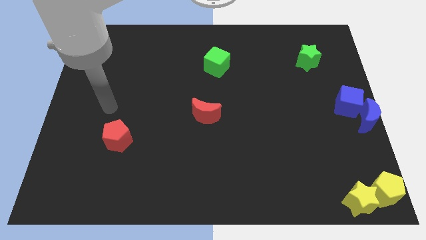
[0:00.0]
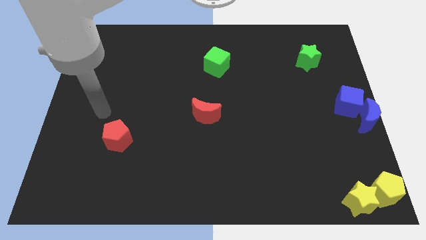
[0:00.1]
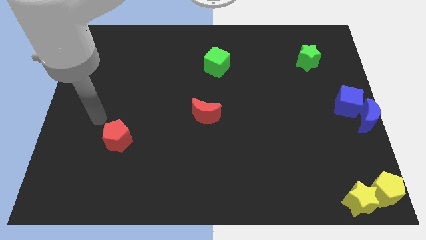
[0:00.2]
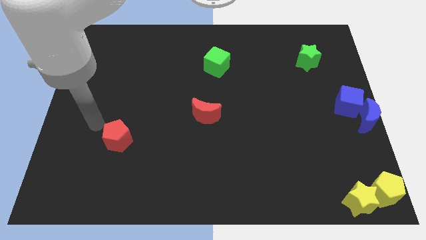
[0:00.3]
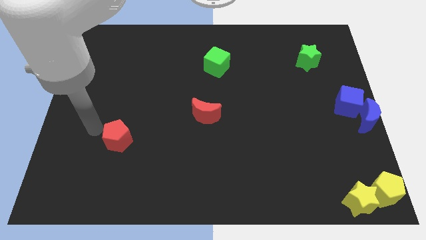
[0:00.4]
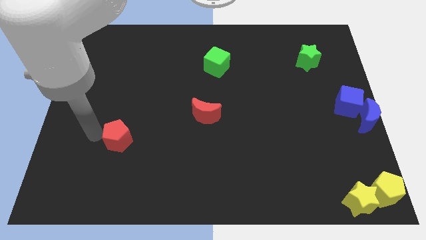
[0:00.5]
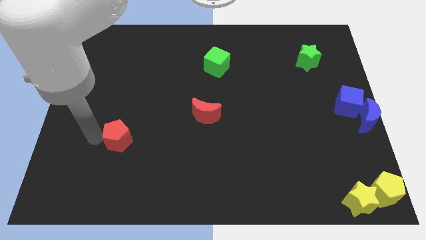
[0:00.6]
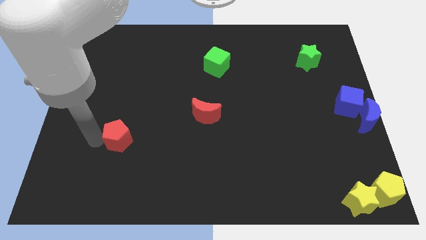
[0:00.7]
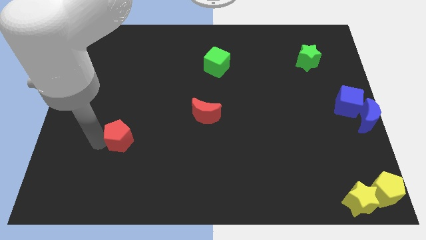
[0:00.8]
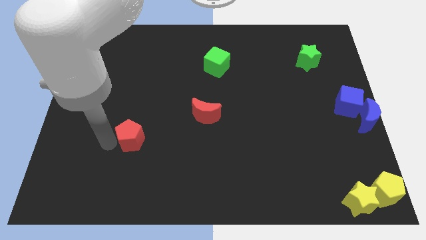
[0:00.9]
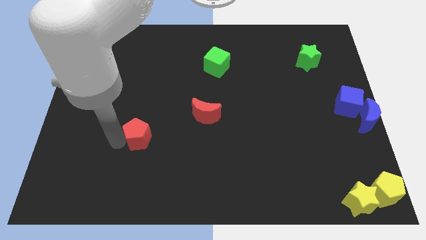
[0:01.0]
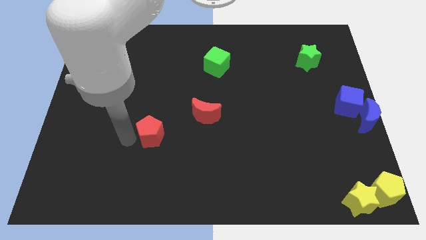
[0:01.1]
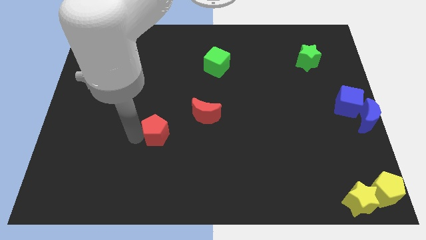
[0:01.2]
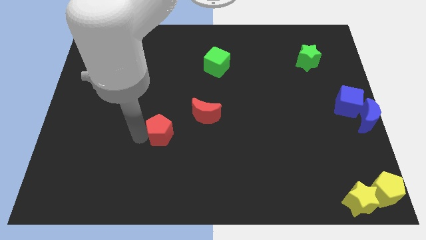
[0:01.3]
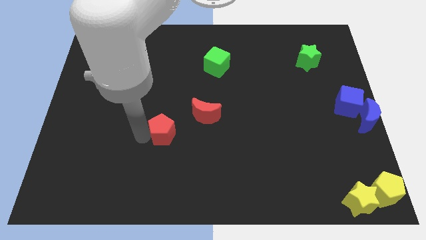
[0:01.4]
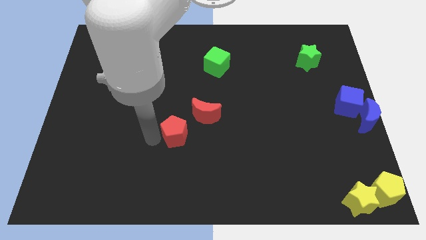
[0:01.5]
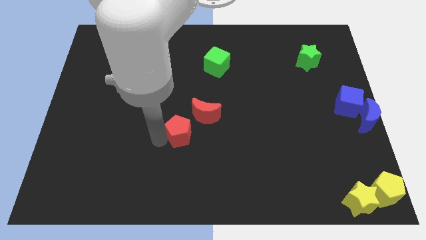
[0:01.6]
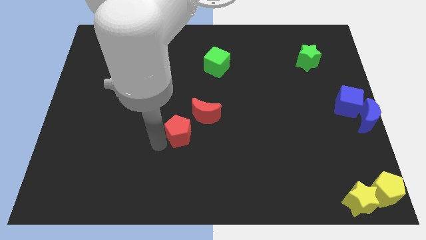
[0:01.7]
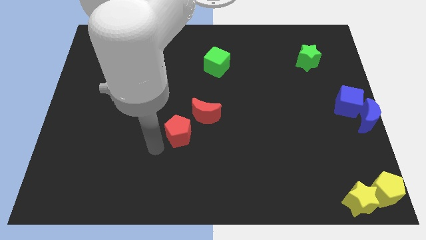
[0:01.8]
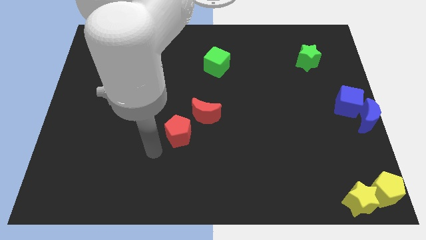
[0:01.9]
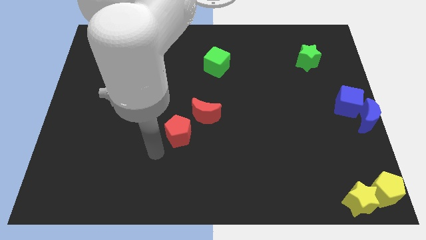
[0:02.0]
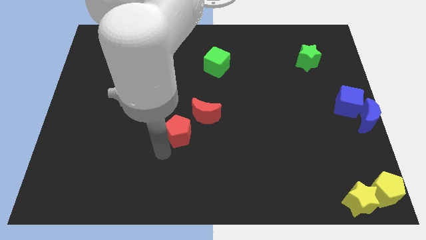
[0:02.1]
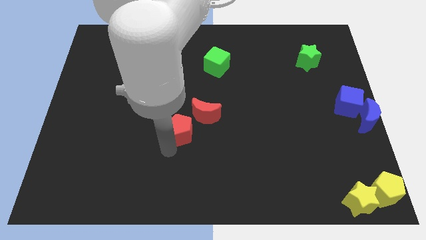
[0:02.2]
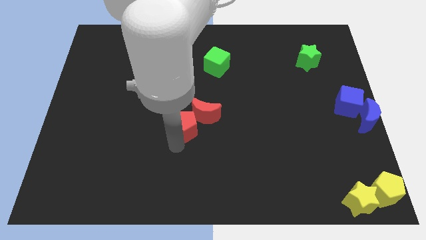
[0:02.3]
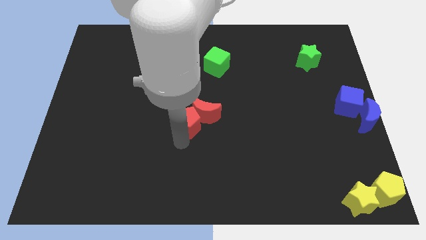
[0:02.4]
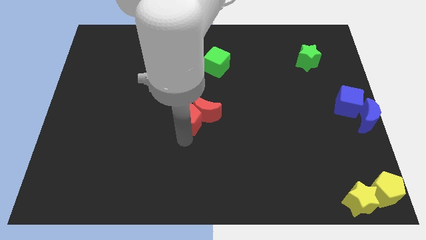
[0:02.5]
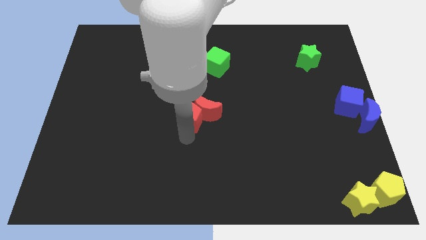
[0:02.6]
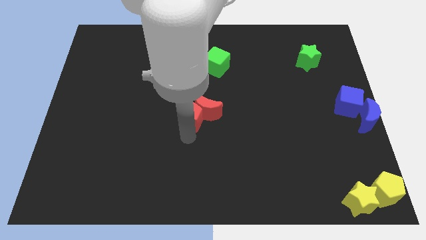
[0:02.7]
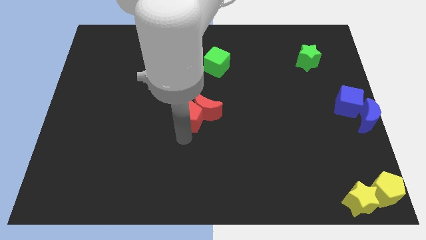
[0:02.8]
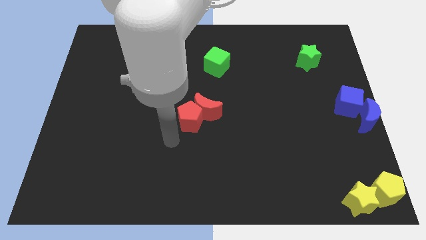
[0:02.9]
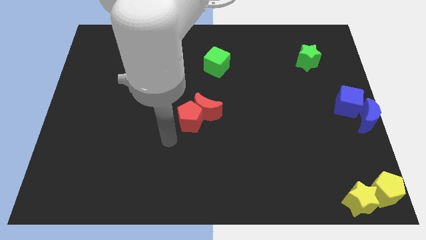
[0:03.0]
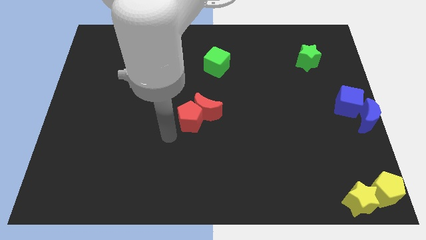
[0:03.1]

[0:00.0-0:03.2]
move the red pentagon into the red crescent

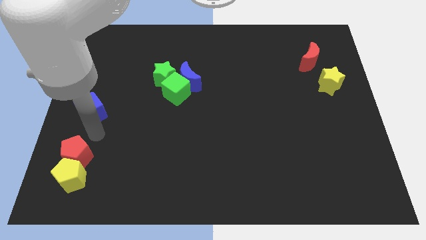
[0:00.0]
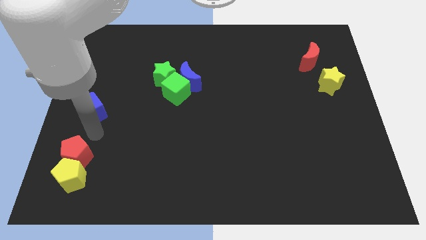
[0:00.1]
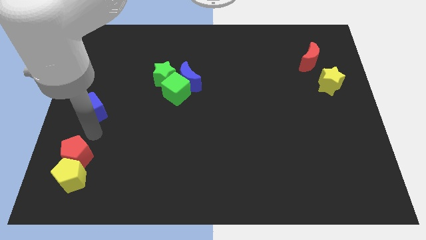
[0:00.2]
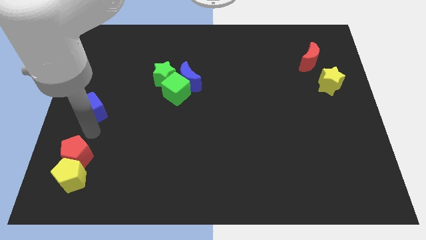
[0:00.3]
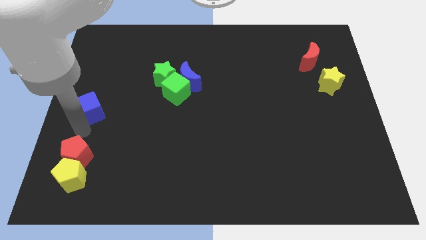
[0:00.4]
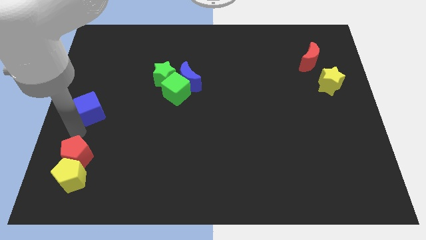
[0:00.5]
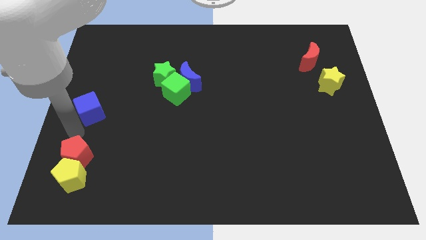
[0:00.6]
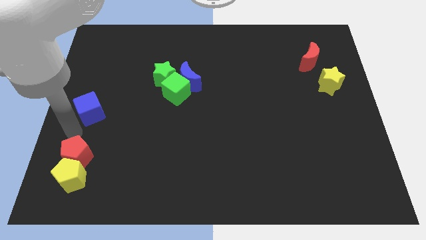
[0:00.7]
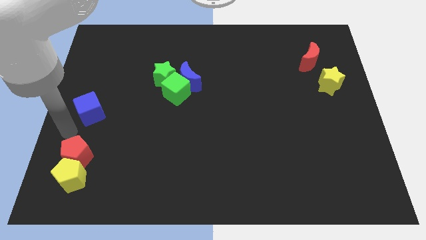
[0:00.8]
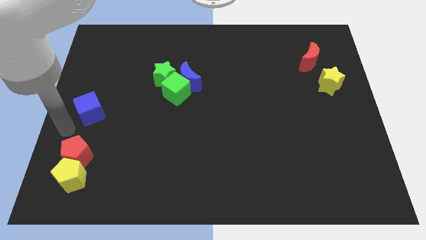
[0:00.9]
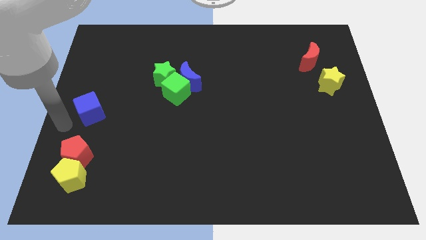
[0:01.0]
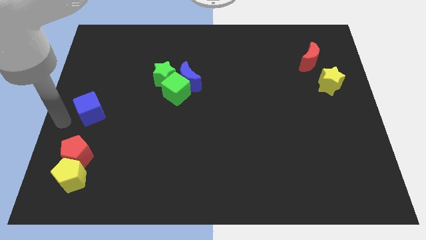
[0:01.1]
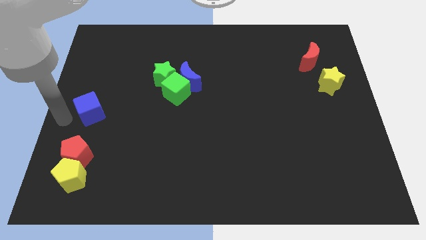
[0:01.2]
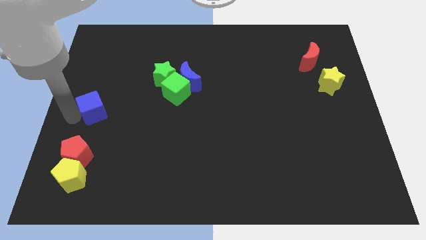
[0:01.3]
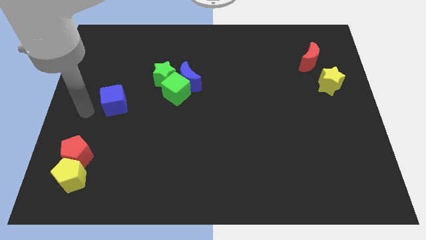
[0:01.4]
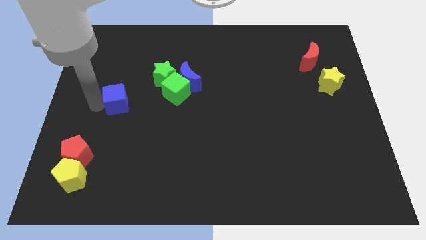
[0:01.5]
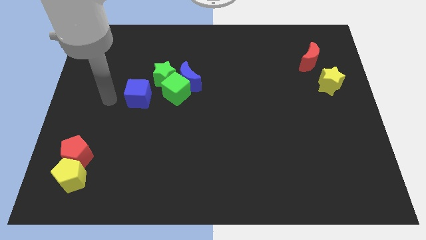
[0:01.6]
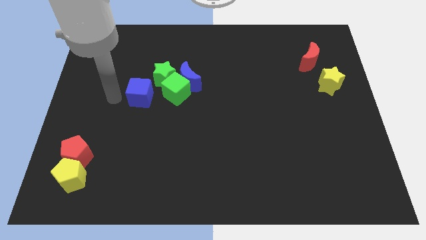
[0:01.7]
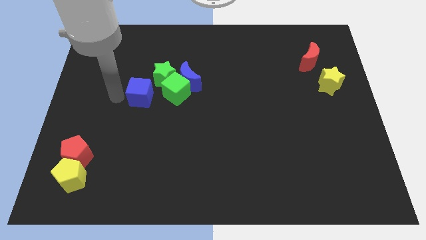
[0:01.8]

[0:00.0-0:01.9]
move the blue cube towards the green blocks

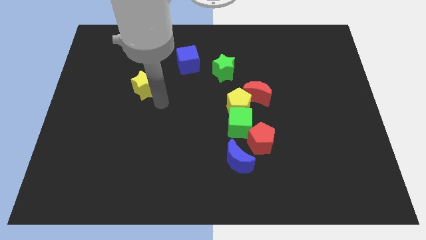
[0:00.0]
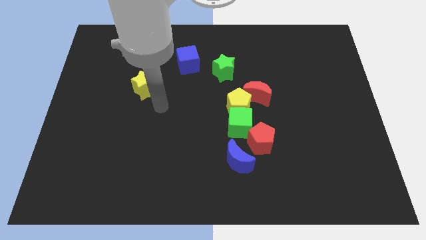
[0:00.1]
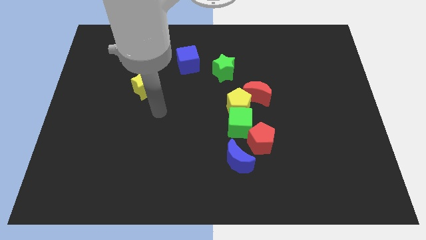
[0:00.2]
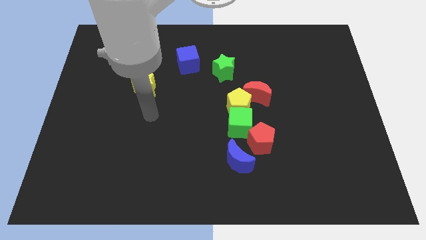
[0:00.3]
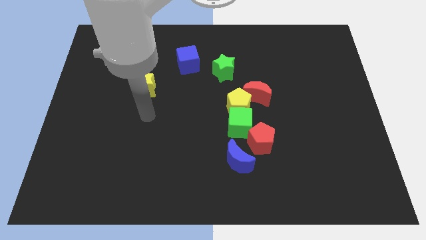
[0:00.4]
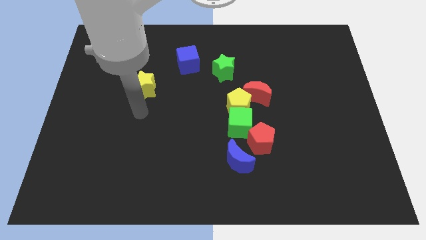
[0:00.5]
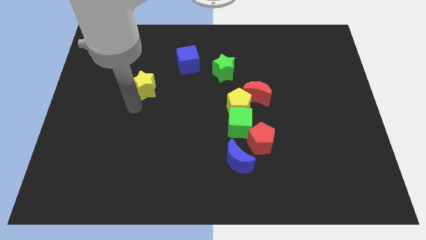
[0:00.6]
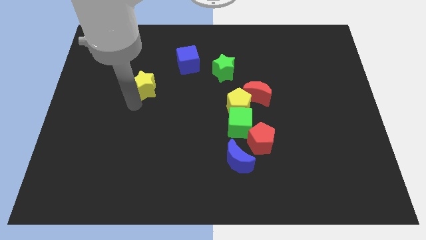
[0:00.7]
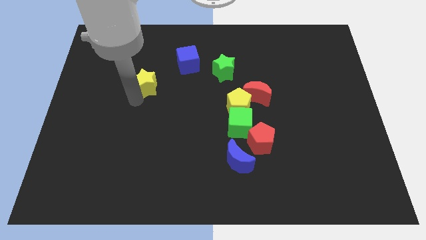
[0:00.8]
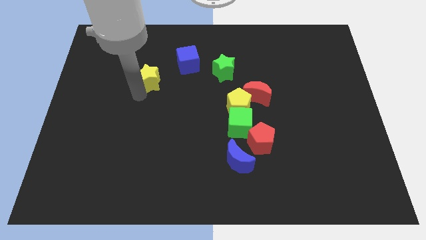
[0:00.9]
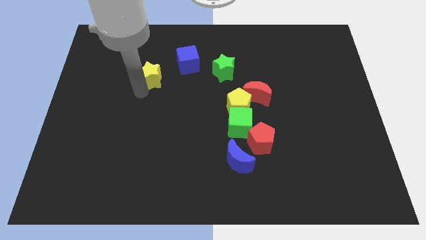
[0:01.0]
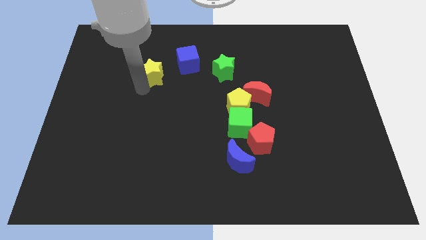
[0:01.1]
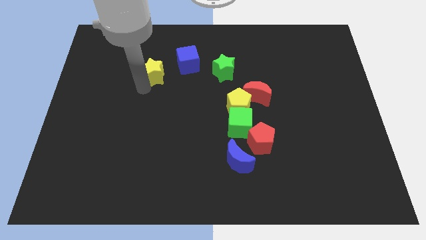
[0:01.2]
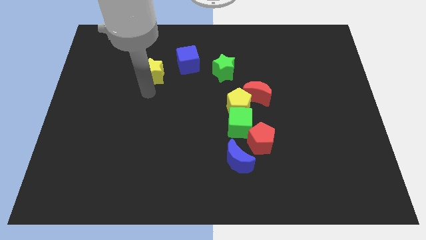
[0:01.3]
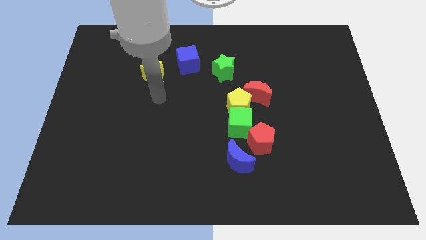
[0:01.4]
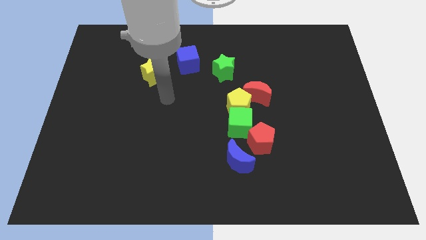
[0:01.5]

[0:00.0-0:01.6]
place the yellow star left to the blue cube

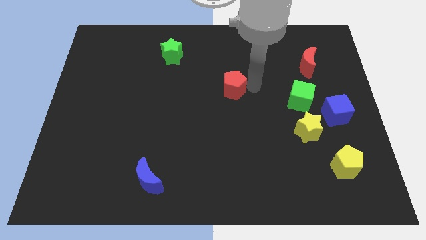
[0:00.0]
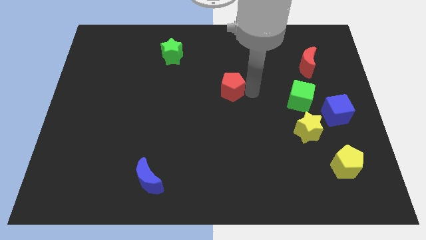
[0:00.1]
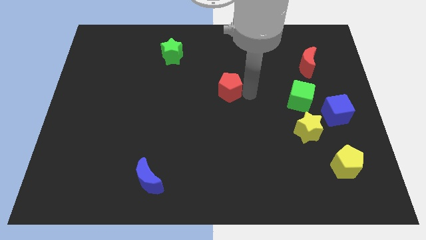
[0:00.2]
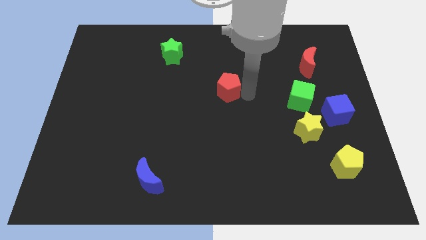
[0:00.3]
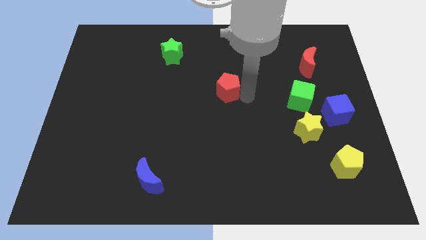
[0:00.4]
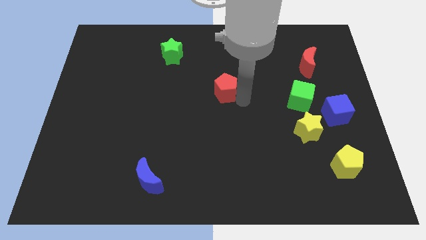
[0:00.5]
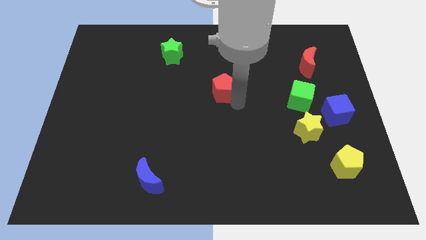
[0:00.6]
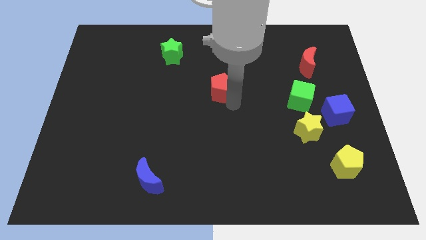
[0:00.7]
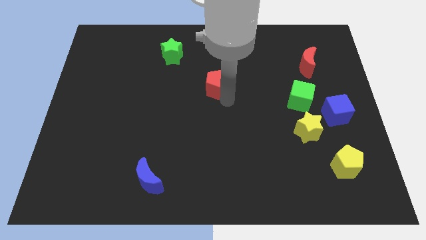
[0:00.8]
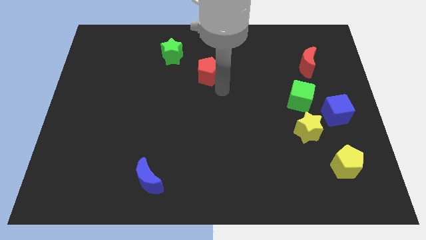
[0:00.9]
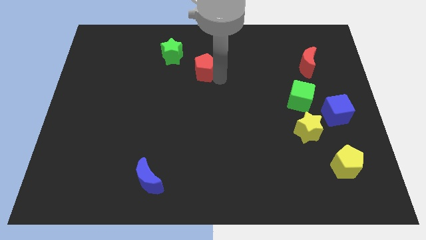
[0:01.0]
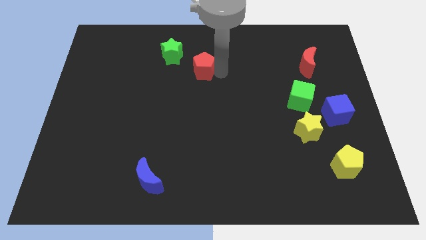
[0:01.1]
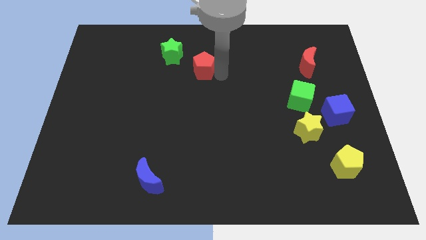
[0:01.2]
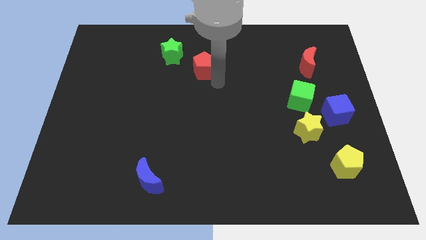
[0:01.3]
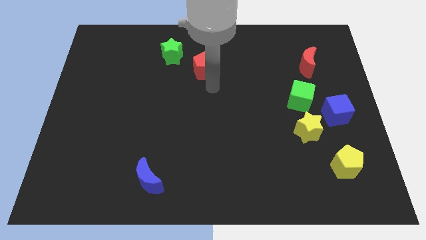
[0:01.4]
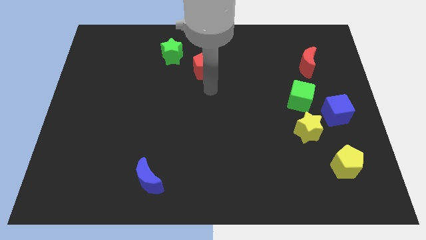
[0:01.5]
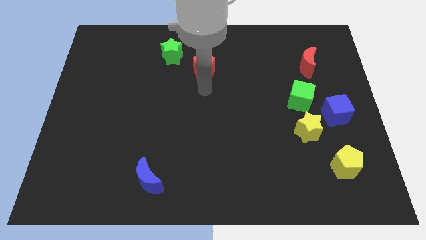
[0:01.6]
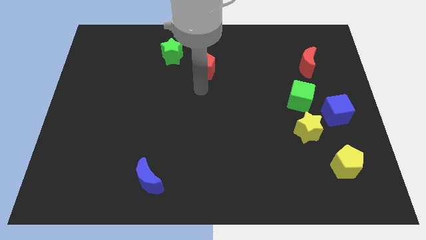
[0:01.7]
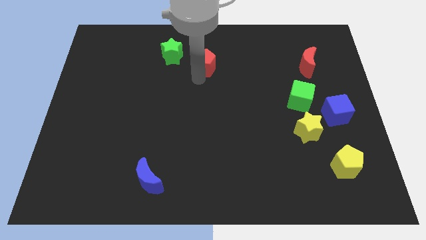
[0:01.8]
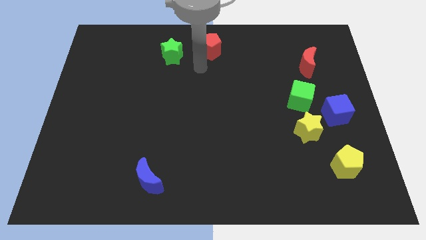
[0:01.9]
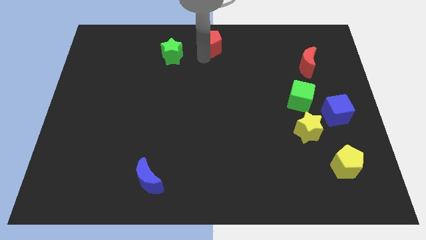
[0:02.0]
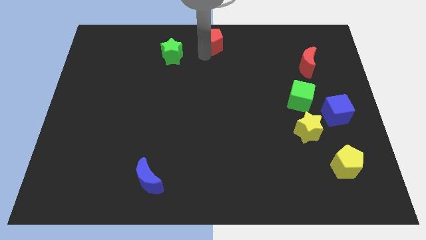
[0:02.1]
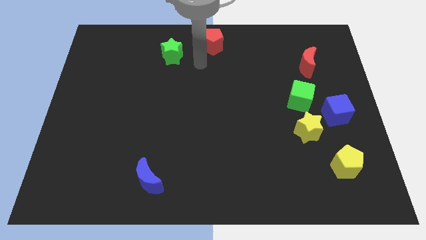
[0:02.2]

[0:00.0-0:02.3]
place the red pentagon at the top center of the board
